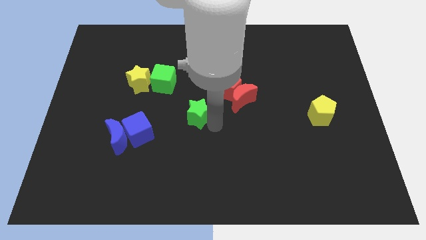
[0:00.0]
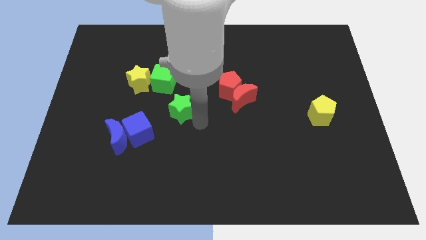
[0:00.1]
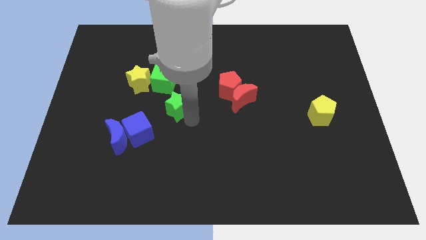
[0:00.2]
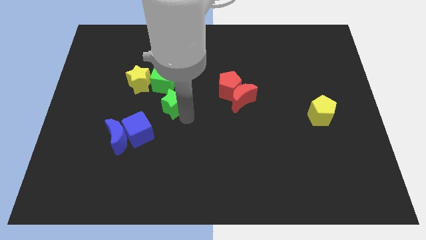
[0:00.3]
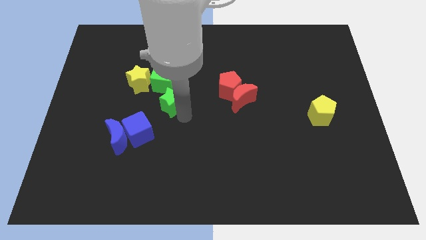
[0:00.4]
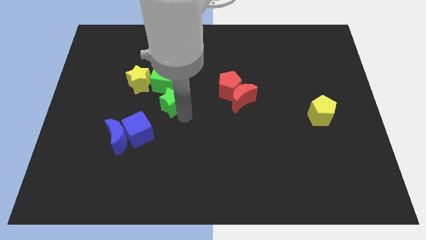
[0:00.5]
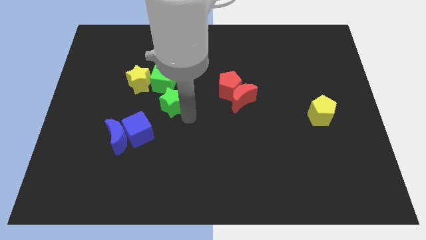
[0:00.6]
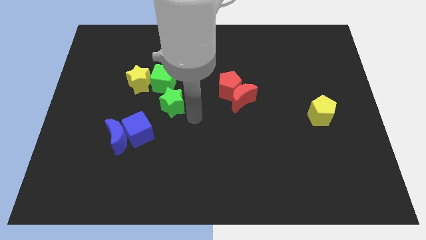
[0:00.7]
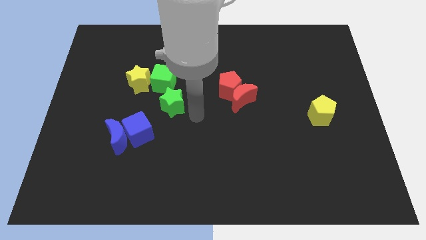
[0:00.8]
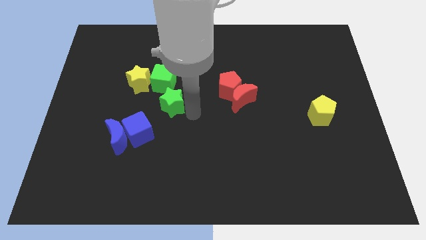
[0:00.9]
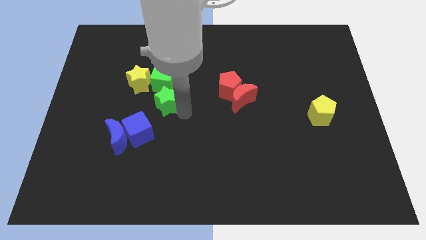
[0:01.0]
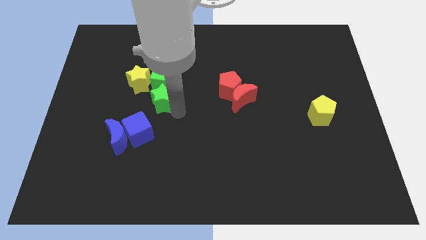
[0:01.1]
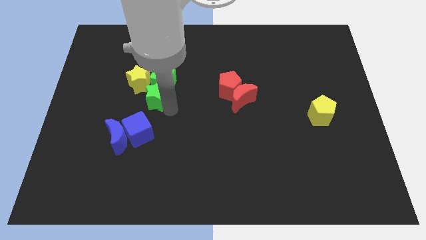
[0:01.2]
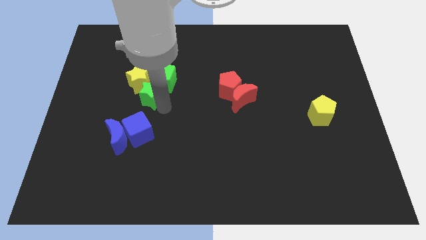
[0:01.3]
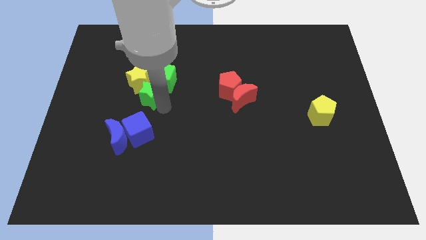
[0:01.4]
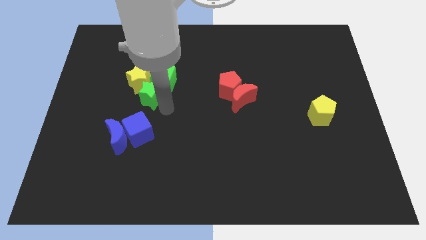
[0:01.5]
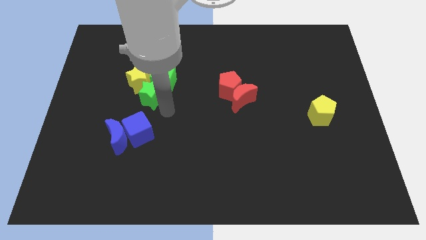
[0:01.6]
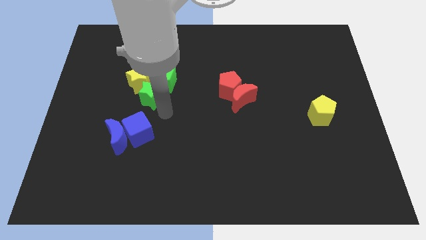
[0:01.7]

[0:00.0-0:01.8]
push the green star into the yellow star

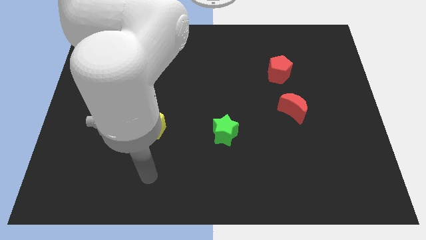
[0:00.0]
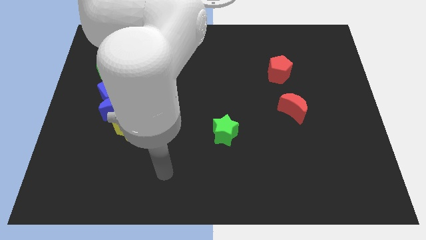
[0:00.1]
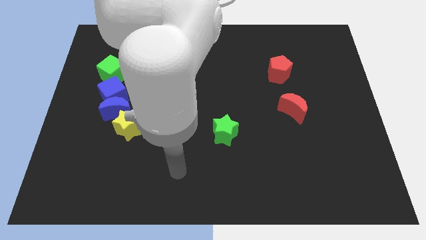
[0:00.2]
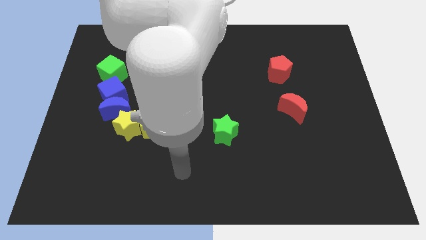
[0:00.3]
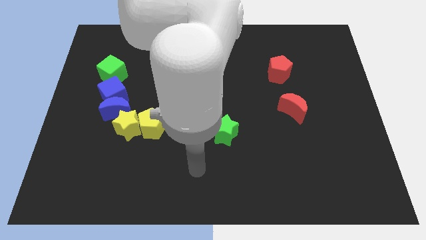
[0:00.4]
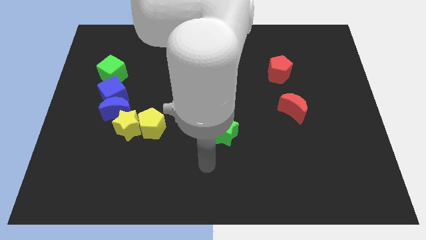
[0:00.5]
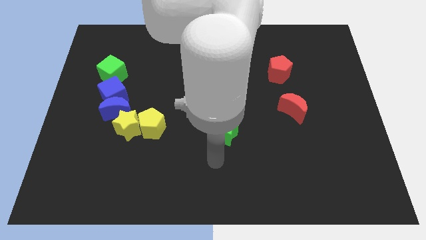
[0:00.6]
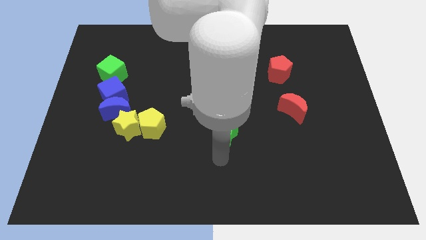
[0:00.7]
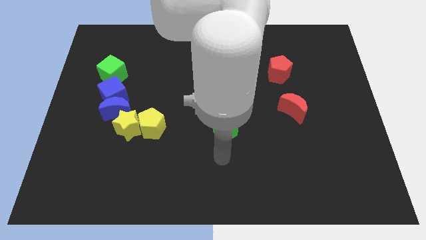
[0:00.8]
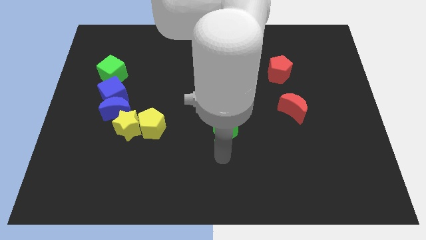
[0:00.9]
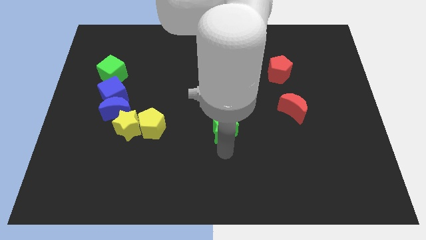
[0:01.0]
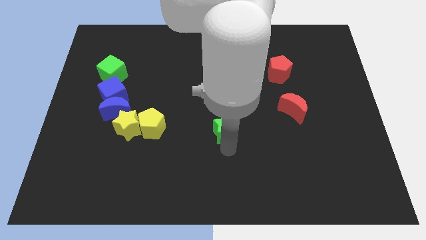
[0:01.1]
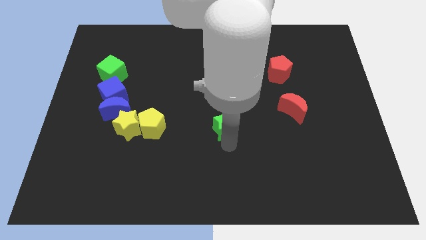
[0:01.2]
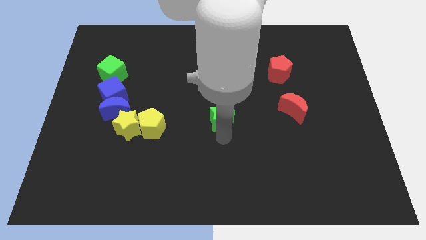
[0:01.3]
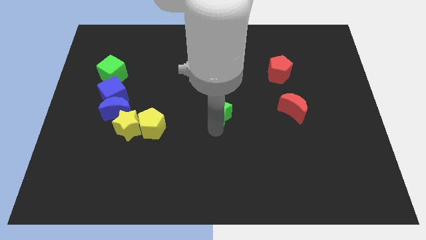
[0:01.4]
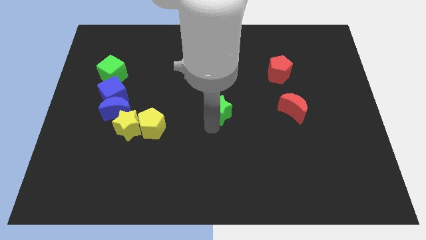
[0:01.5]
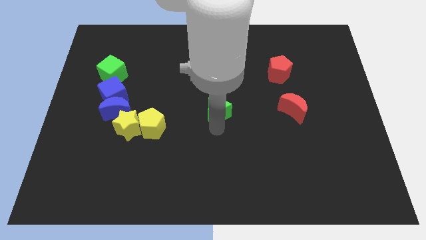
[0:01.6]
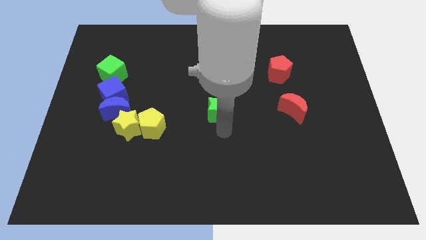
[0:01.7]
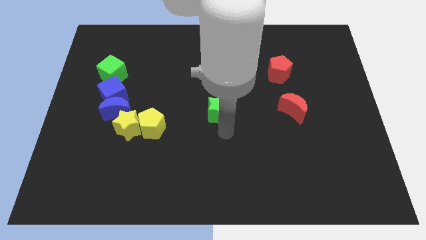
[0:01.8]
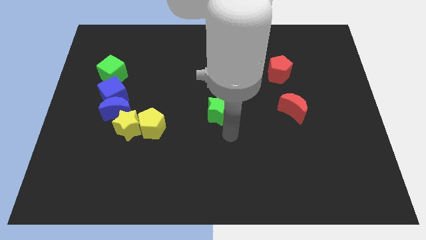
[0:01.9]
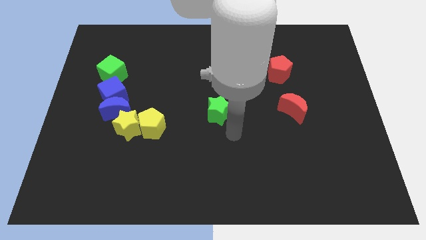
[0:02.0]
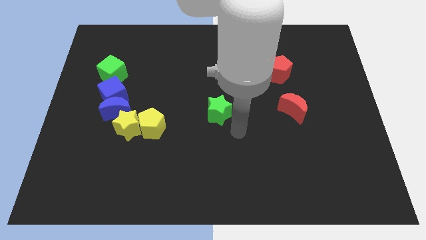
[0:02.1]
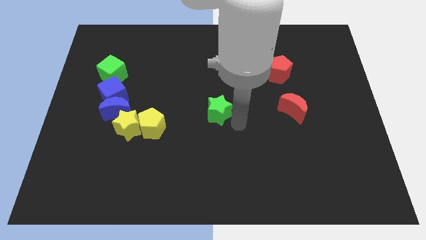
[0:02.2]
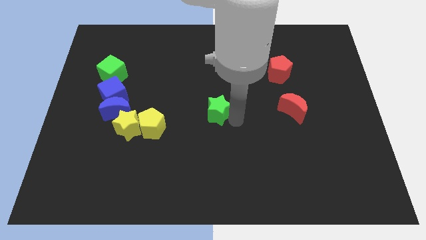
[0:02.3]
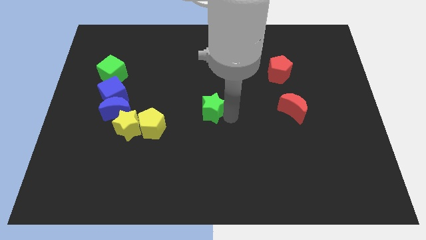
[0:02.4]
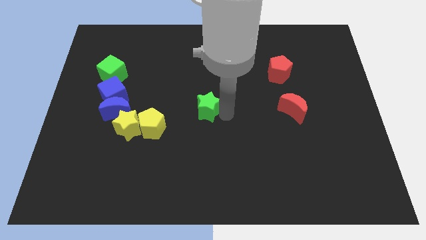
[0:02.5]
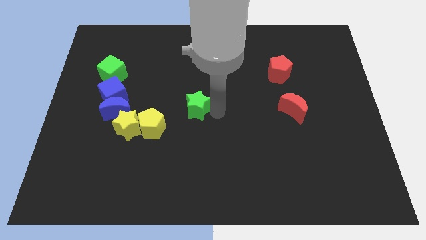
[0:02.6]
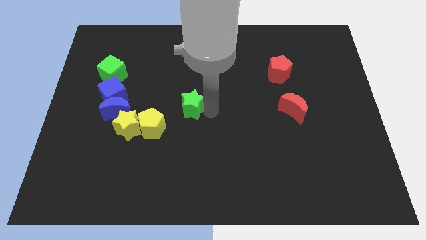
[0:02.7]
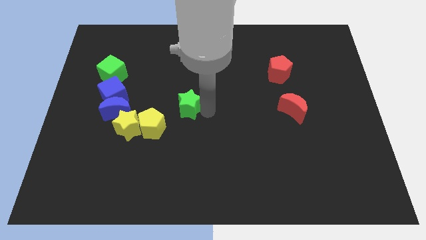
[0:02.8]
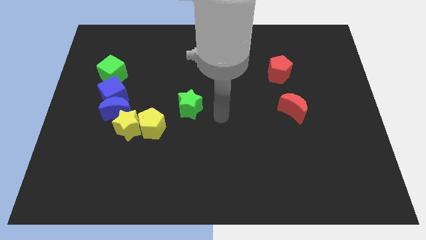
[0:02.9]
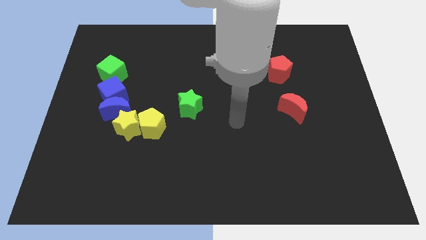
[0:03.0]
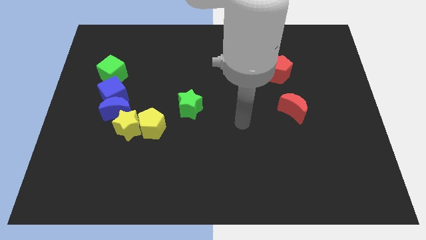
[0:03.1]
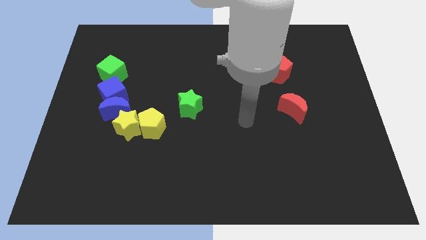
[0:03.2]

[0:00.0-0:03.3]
place the green star diagonal to the yellow pentagon

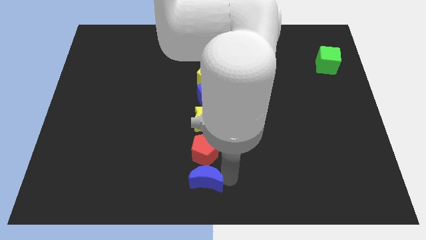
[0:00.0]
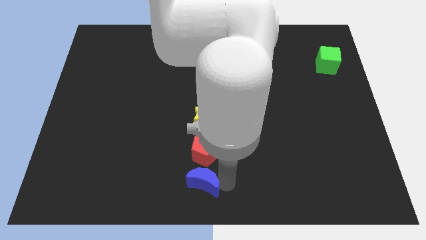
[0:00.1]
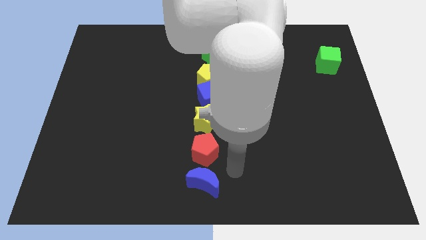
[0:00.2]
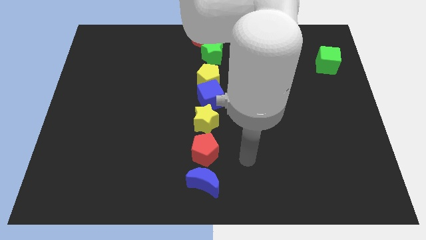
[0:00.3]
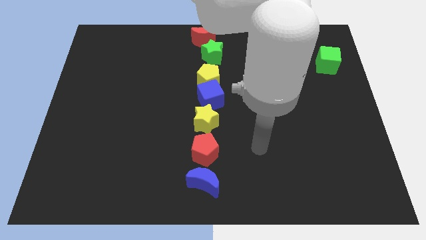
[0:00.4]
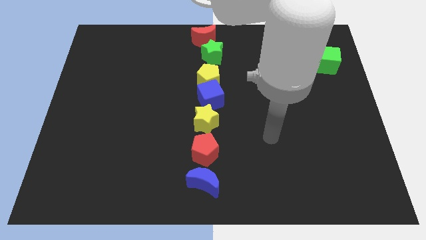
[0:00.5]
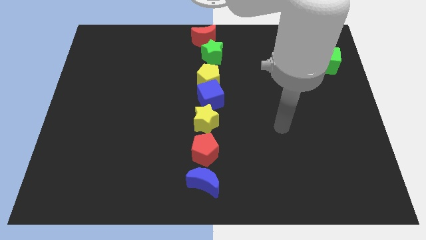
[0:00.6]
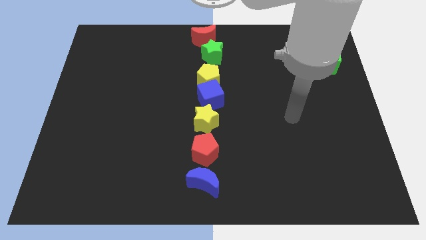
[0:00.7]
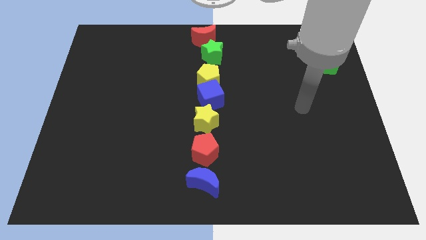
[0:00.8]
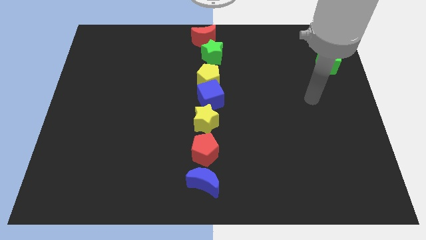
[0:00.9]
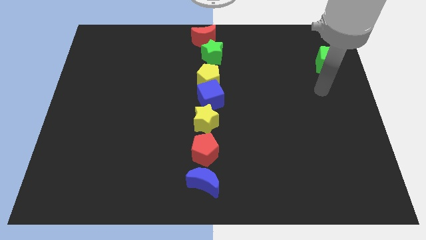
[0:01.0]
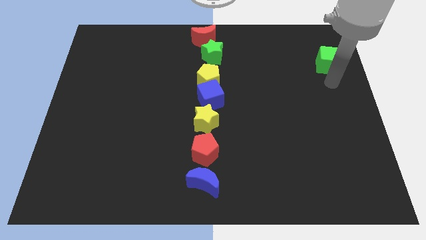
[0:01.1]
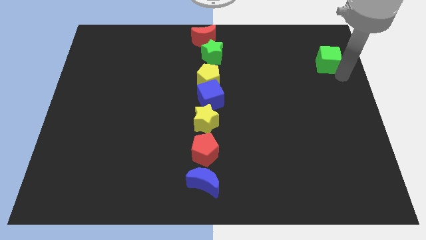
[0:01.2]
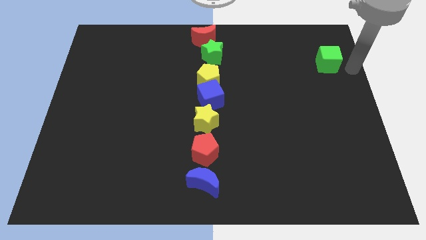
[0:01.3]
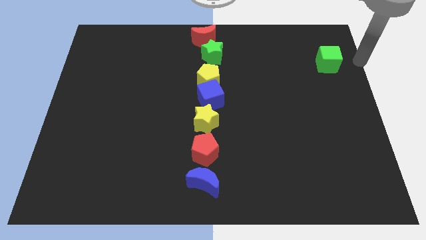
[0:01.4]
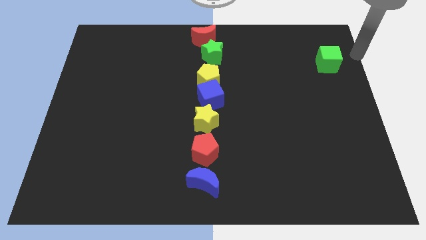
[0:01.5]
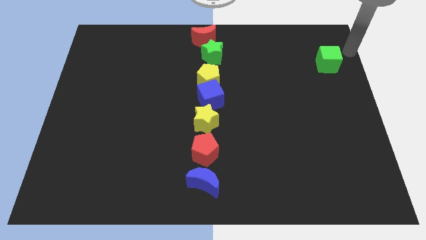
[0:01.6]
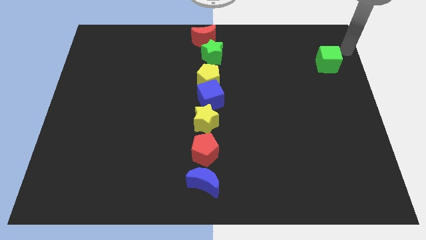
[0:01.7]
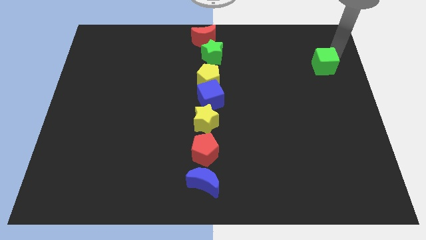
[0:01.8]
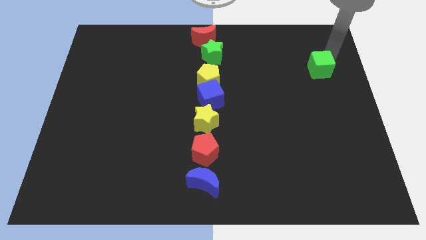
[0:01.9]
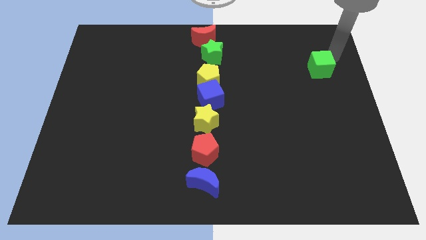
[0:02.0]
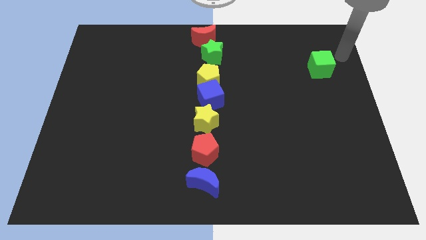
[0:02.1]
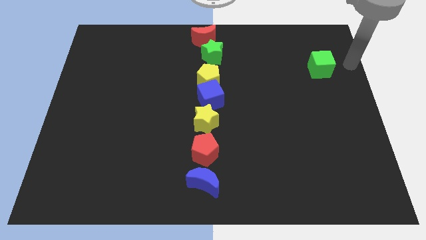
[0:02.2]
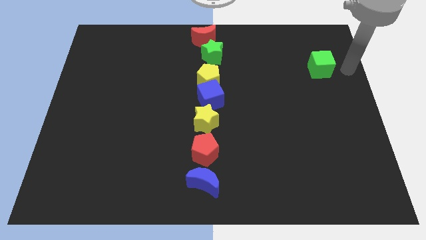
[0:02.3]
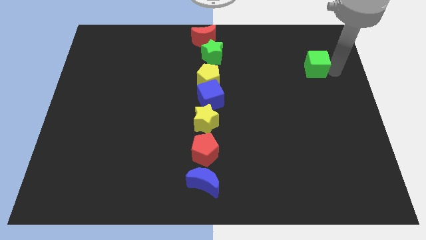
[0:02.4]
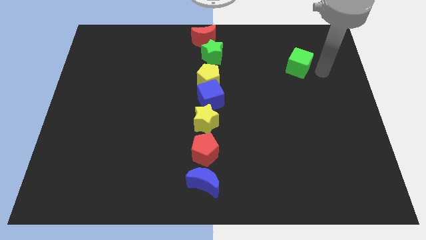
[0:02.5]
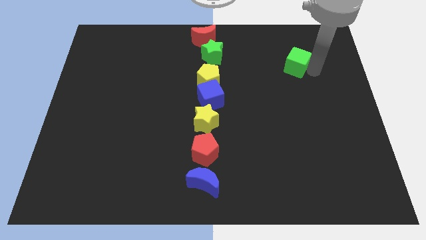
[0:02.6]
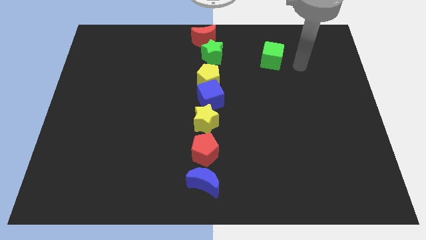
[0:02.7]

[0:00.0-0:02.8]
place green cube to the right of green star

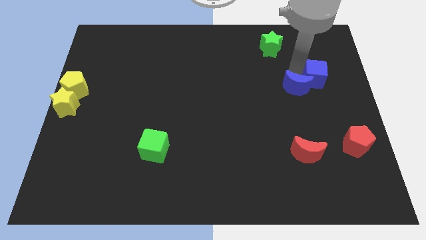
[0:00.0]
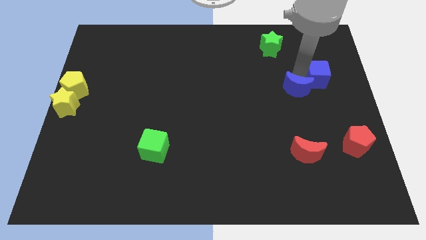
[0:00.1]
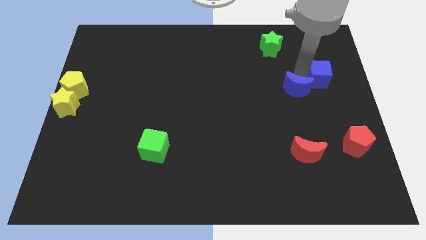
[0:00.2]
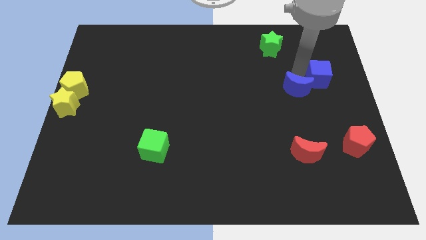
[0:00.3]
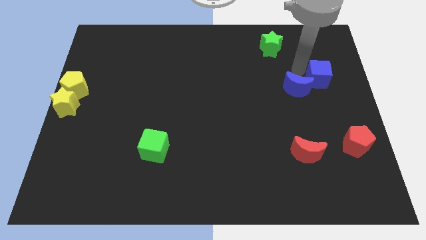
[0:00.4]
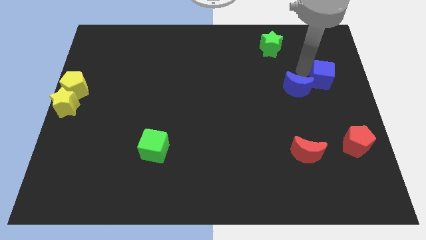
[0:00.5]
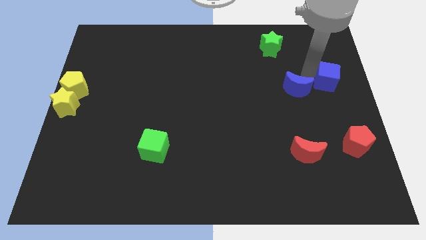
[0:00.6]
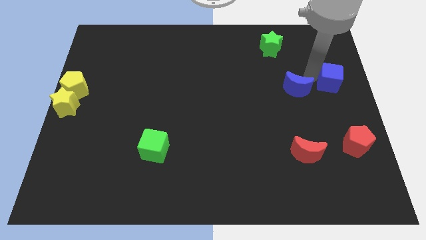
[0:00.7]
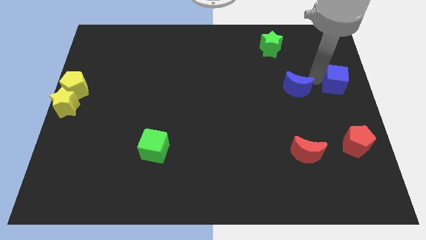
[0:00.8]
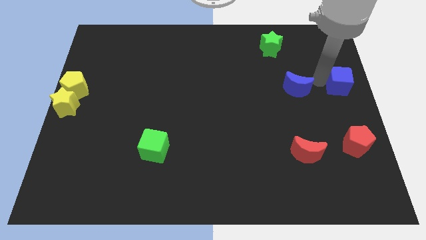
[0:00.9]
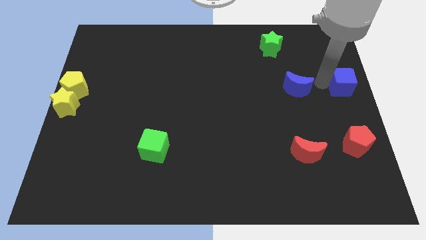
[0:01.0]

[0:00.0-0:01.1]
push the blue cube to the right of the blue crescent
